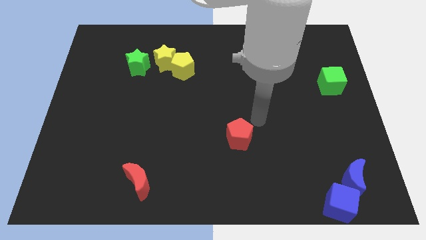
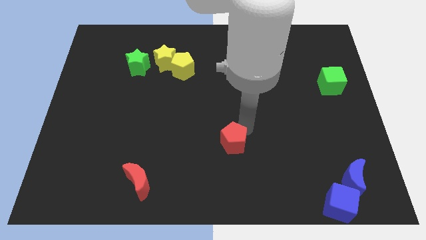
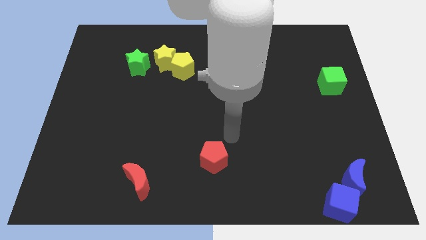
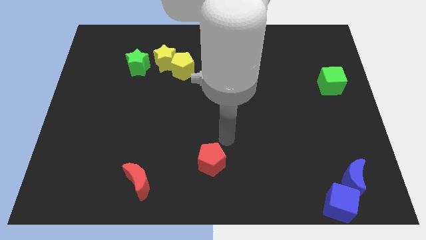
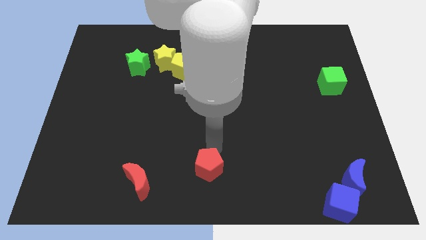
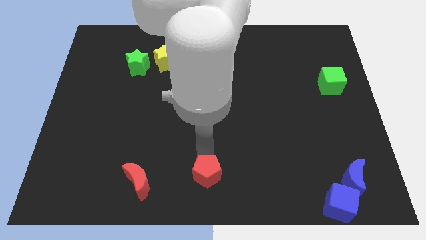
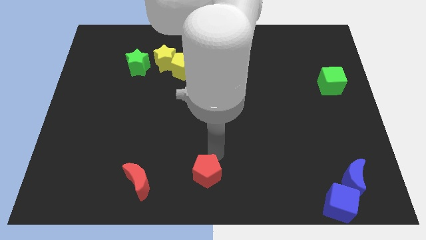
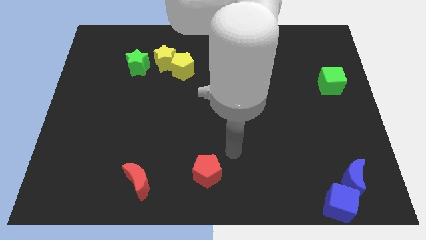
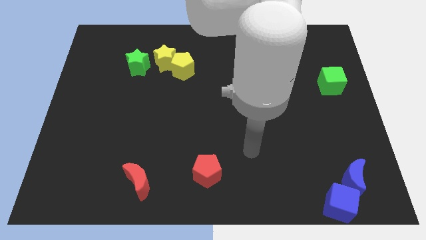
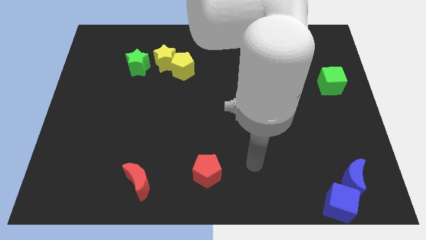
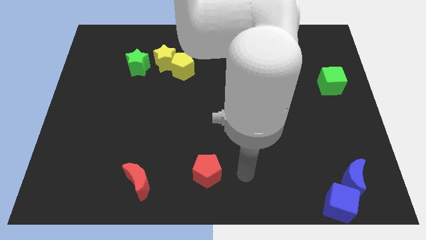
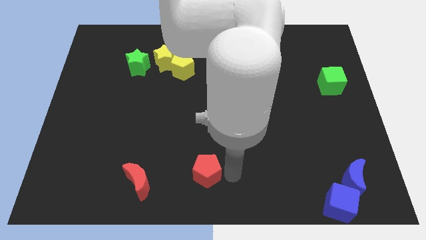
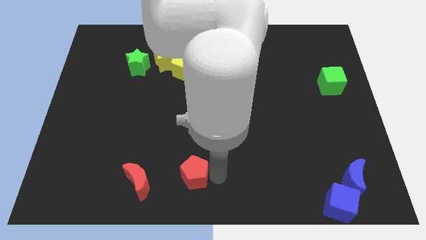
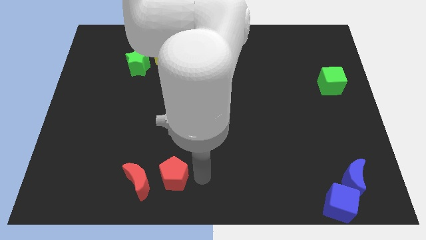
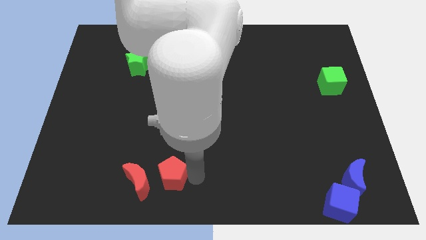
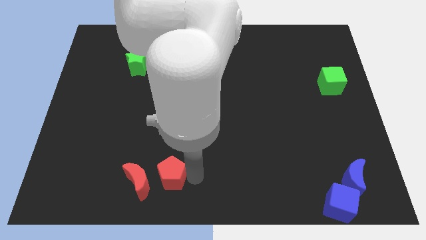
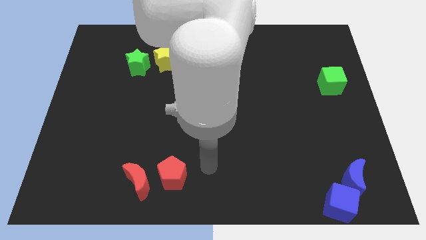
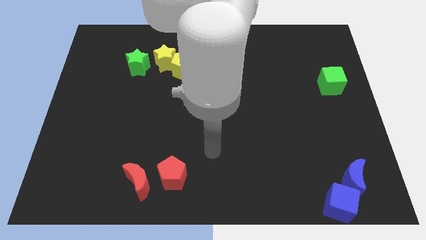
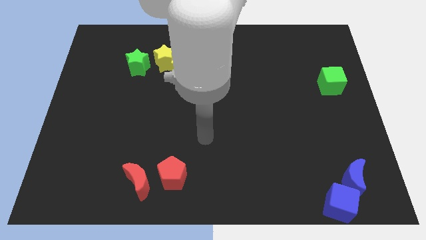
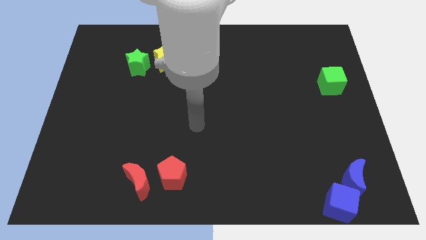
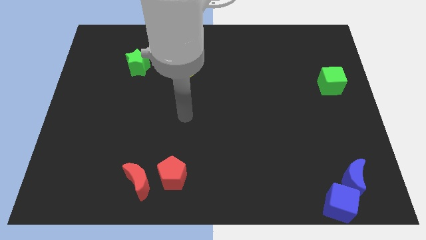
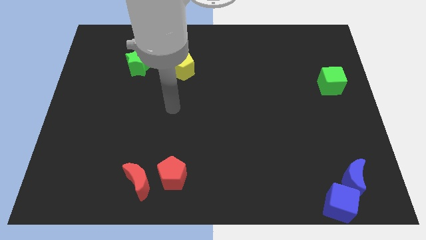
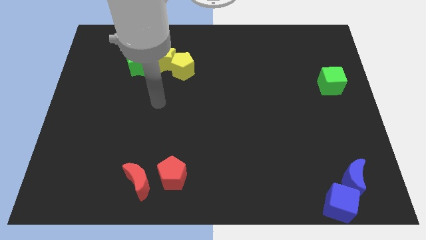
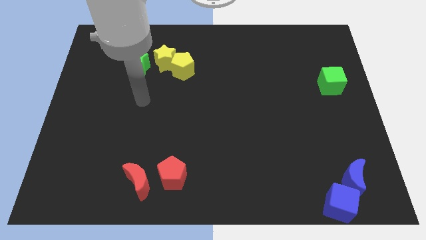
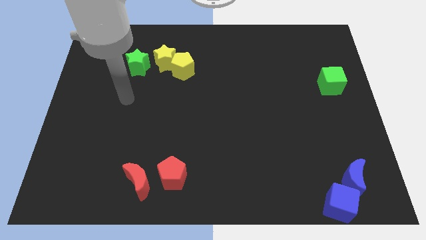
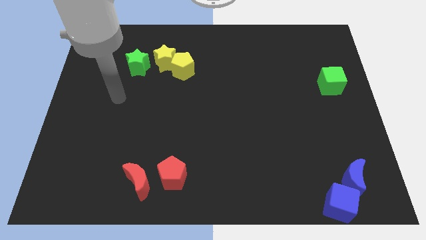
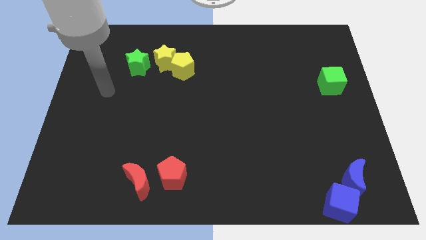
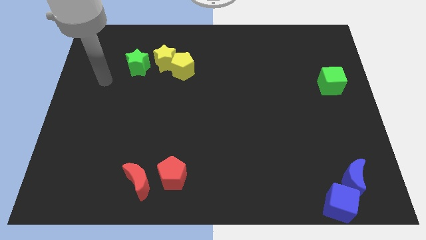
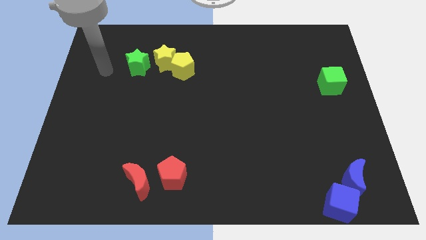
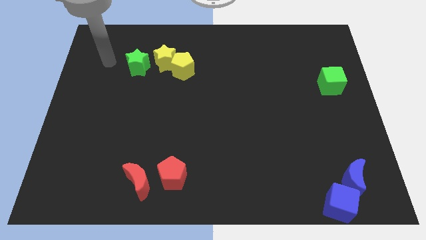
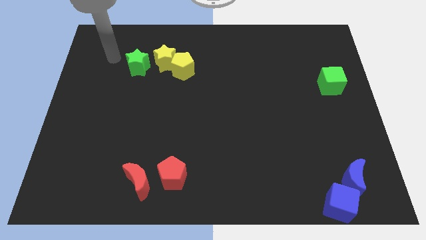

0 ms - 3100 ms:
push the red pentagon towards the red crescent

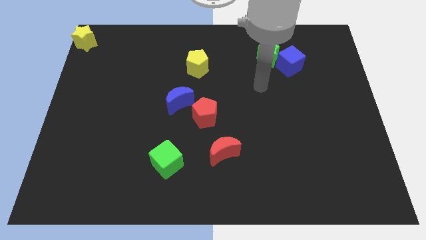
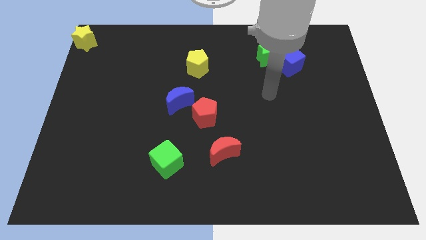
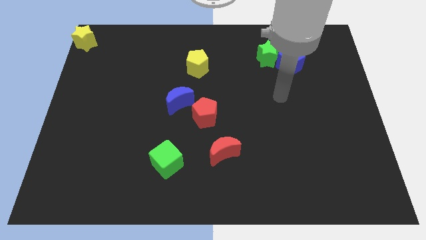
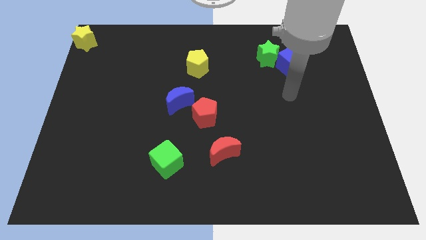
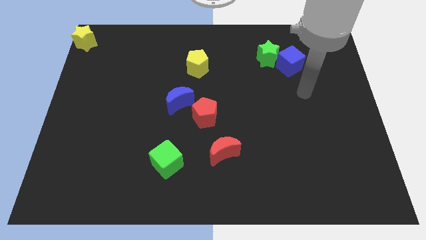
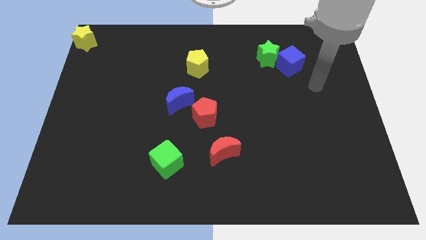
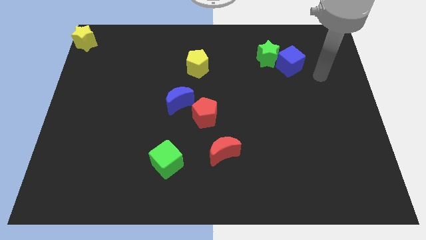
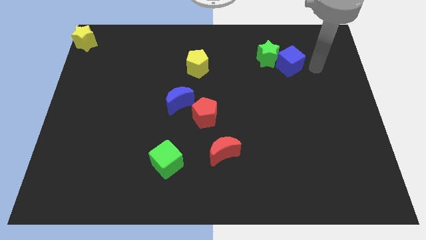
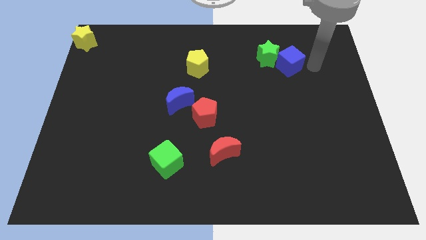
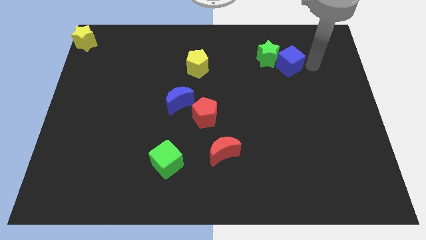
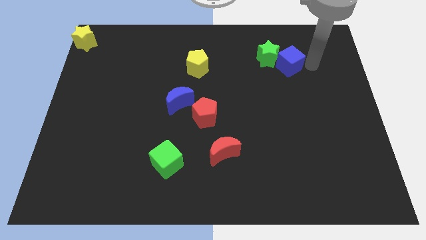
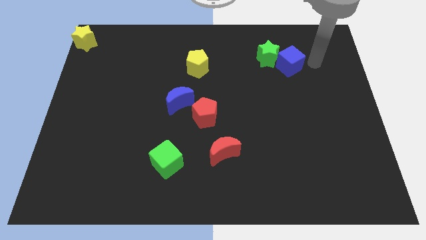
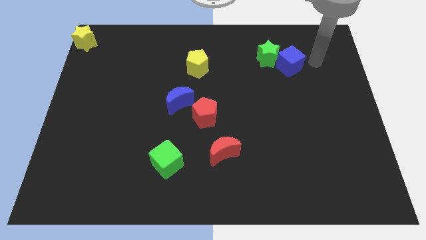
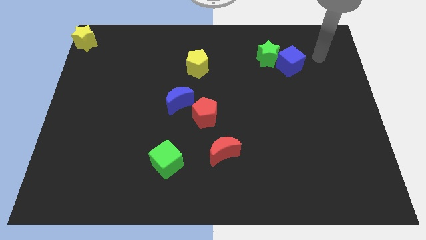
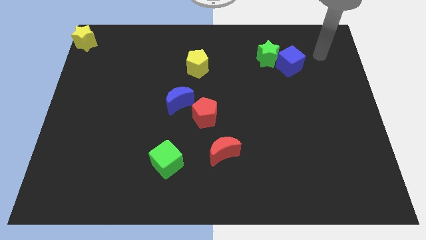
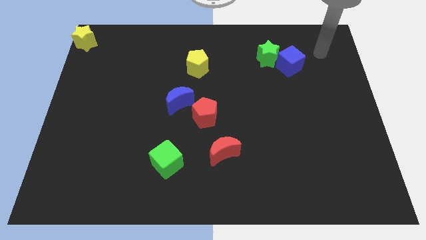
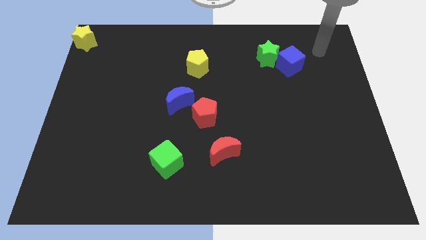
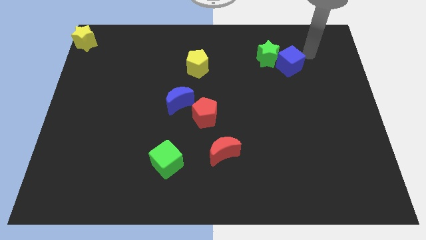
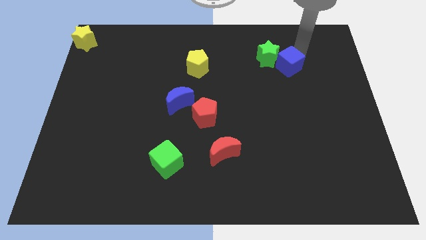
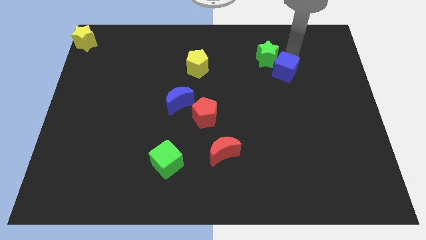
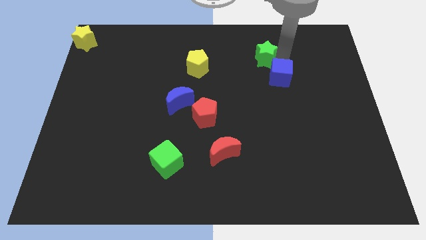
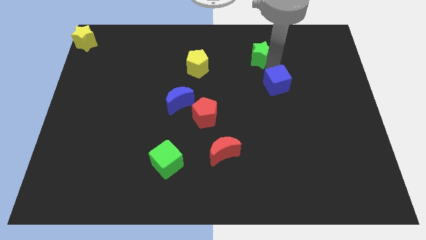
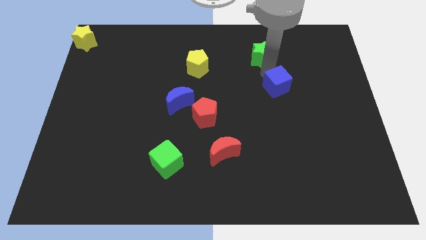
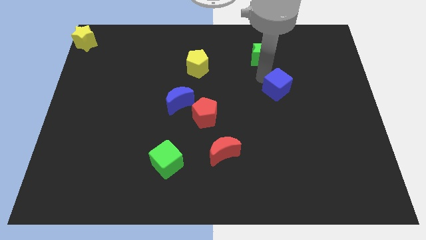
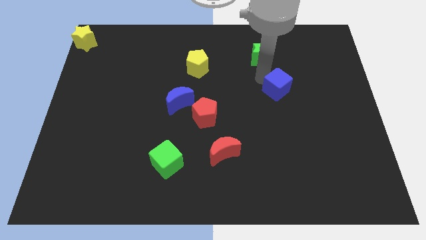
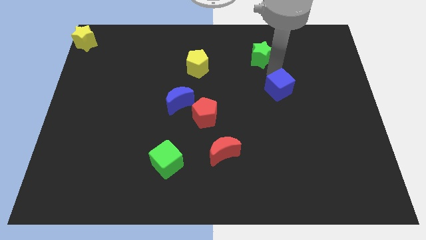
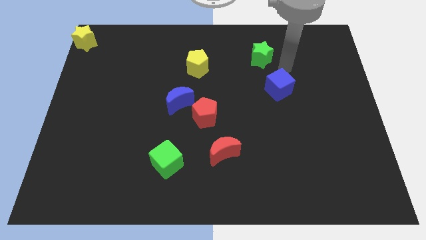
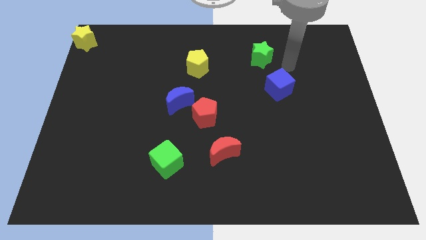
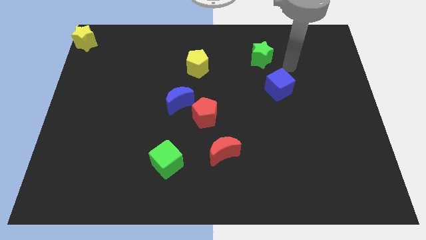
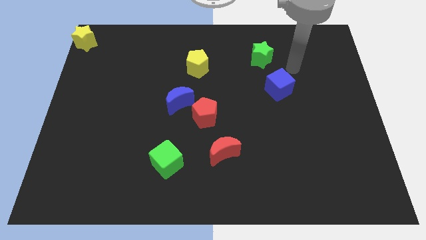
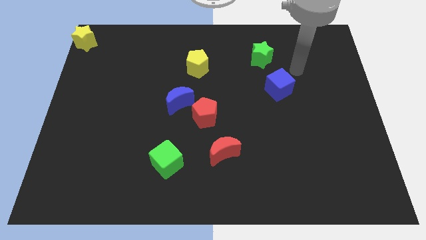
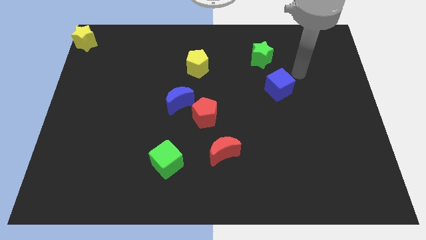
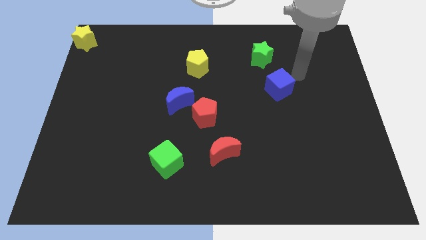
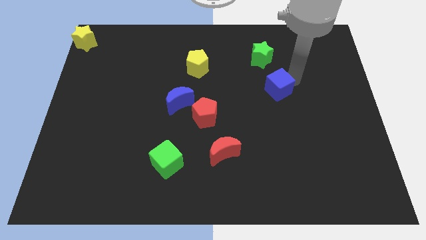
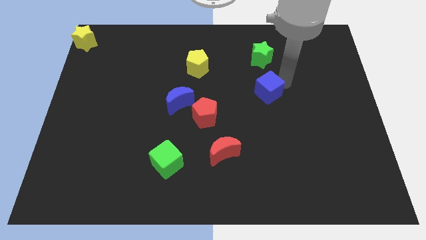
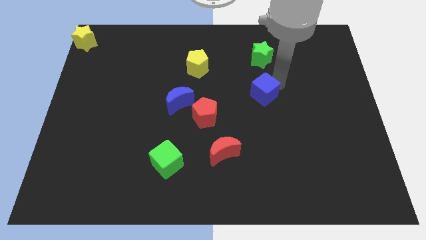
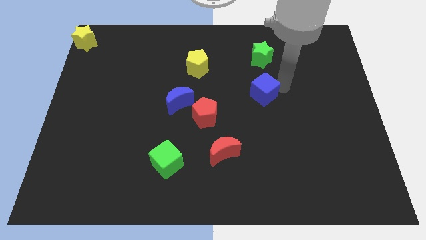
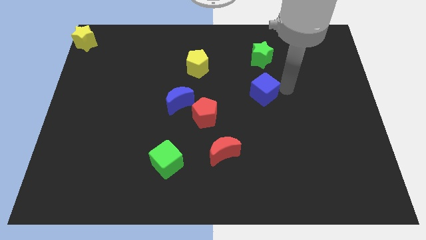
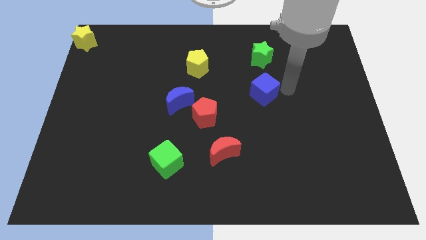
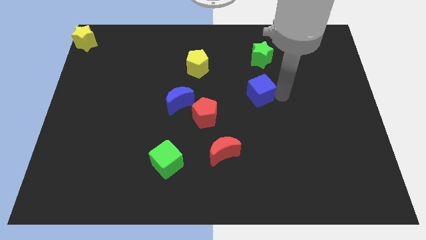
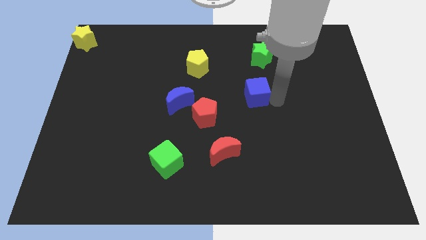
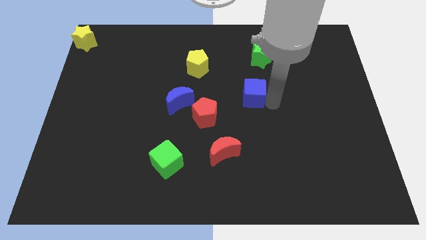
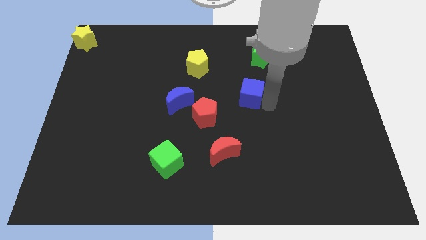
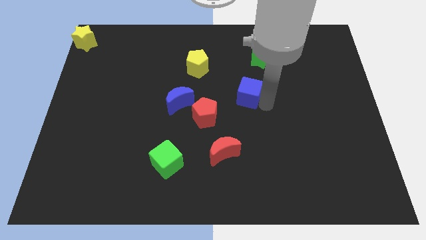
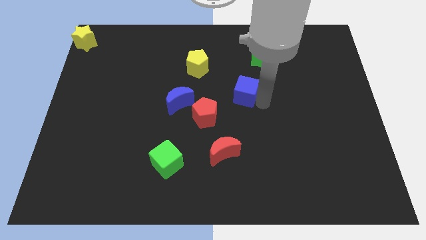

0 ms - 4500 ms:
separate the blue cube from the green star

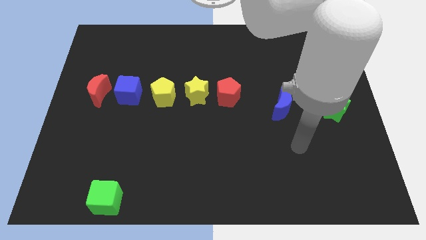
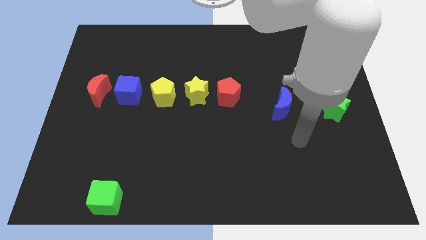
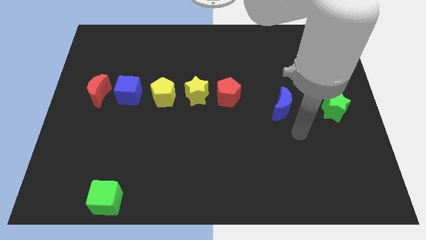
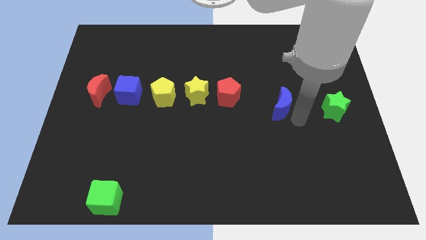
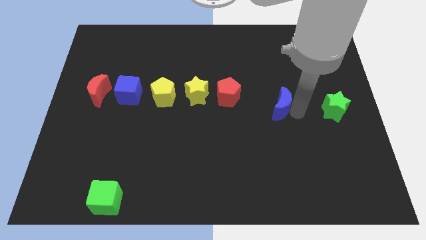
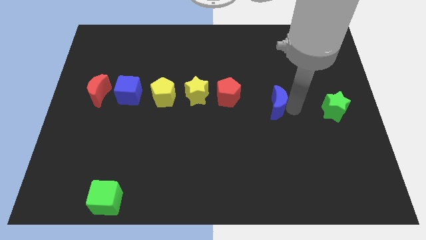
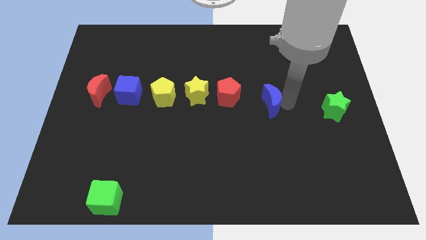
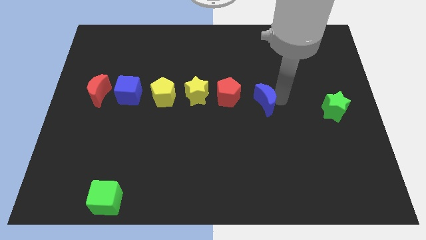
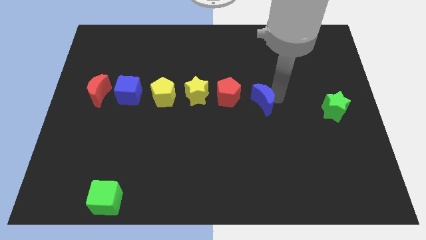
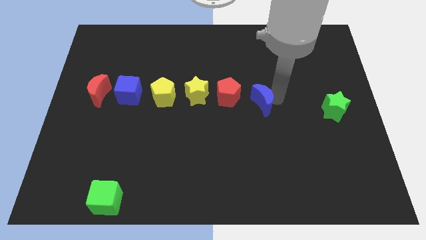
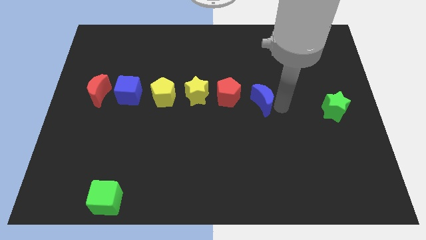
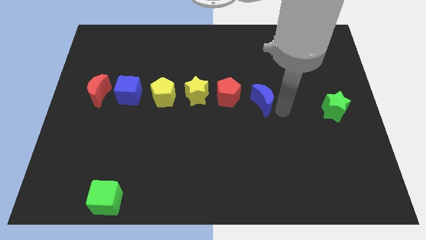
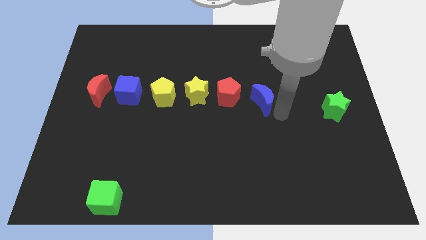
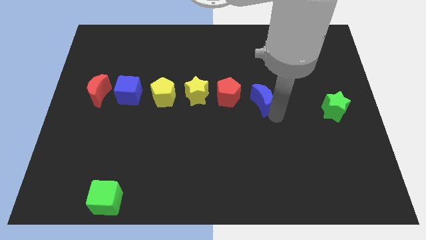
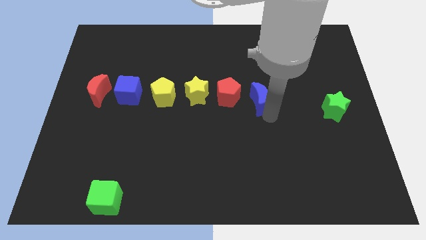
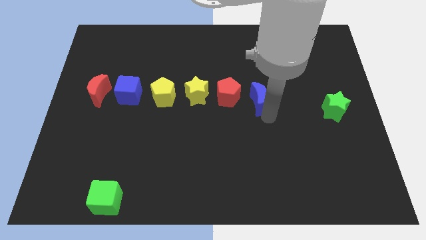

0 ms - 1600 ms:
move the blue crescent to the right of the red pentagon
